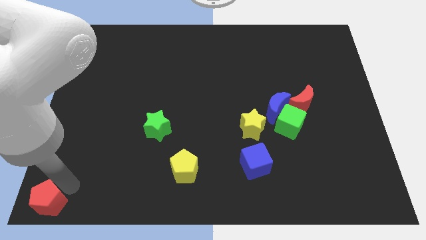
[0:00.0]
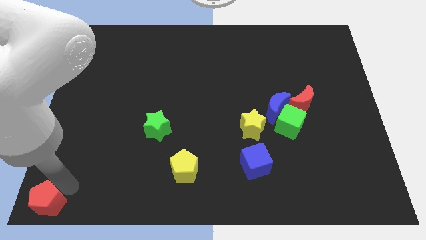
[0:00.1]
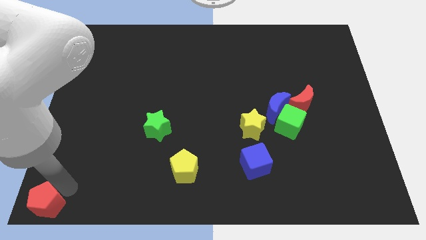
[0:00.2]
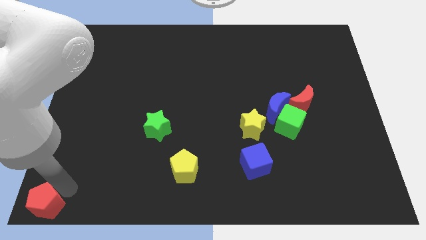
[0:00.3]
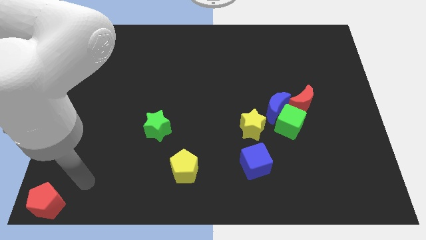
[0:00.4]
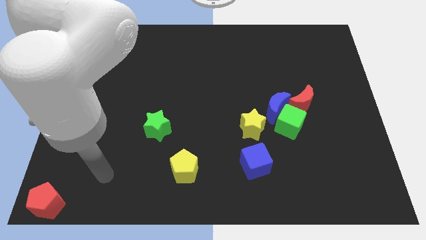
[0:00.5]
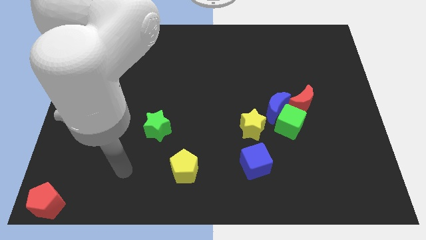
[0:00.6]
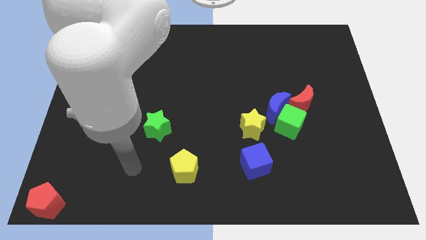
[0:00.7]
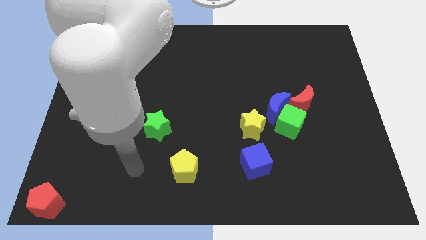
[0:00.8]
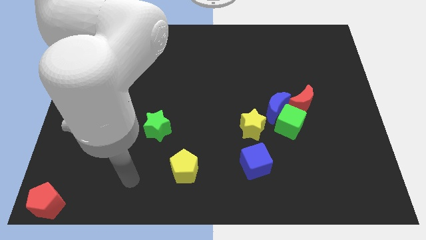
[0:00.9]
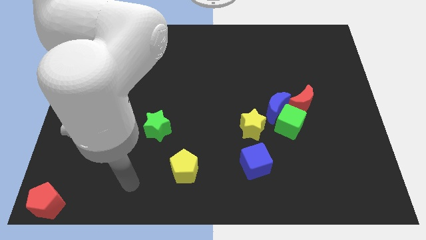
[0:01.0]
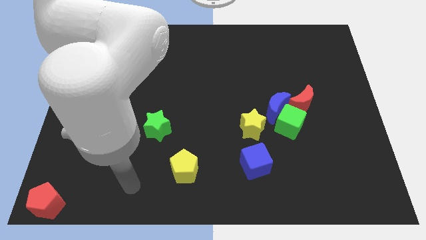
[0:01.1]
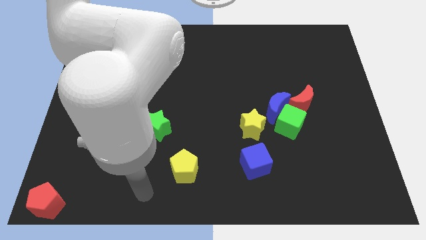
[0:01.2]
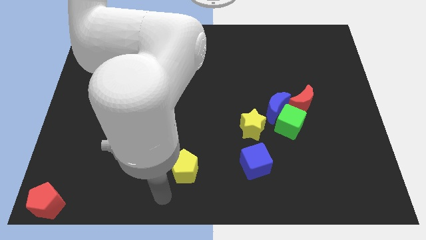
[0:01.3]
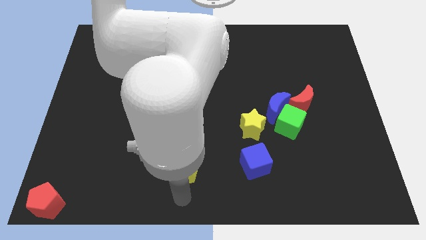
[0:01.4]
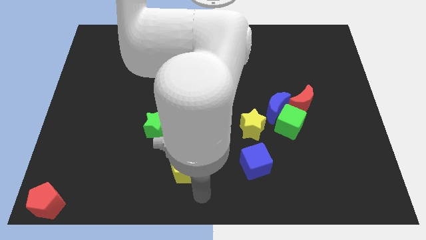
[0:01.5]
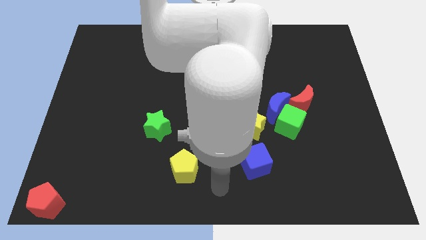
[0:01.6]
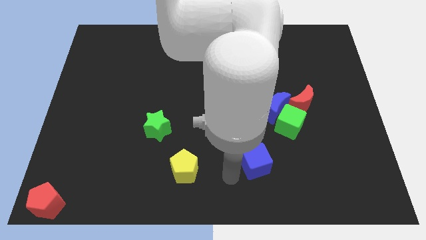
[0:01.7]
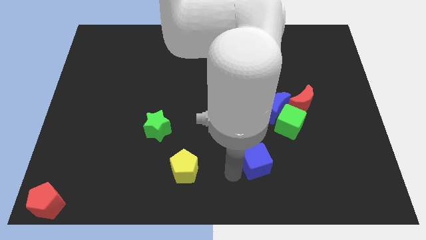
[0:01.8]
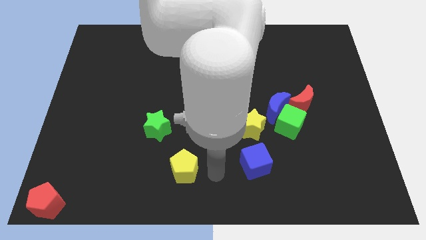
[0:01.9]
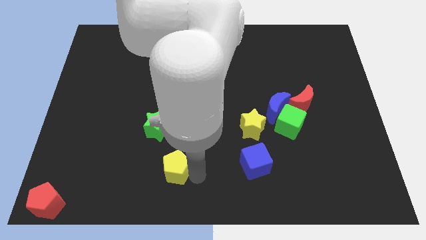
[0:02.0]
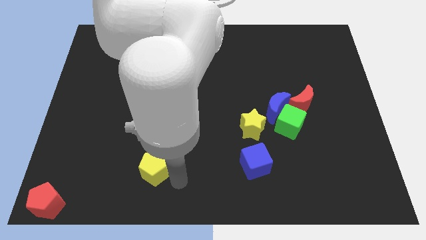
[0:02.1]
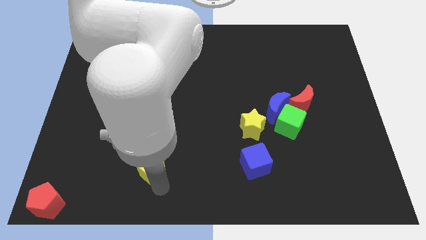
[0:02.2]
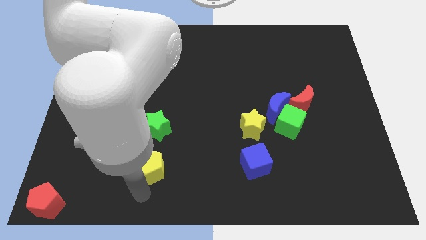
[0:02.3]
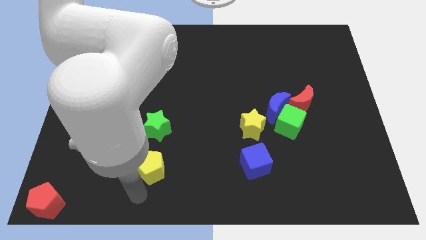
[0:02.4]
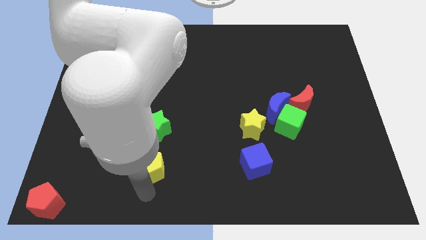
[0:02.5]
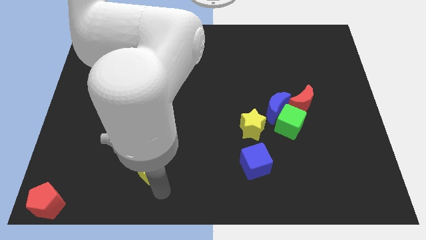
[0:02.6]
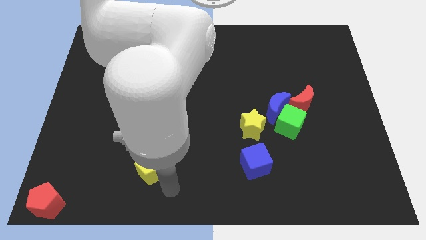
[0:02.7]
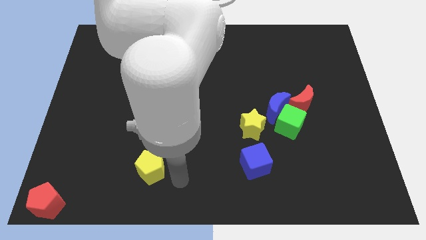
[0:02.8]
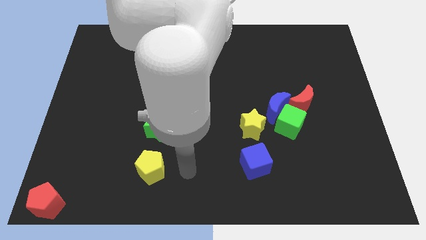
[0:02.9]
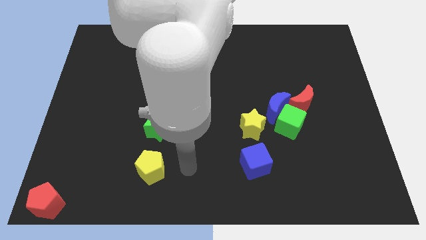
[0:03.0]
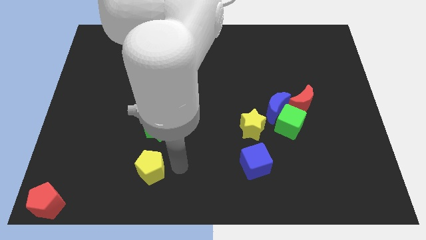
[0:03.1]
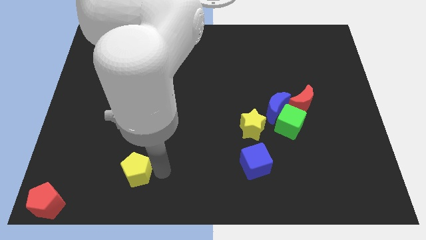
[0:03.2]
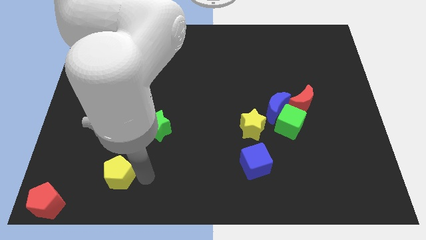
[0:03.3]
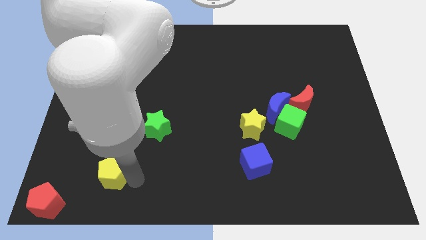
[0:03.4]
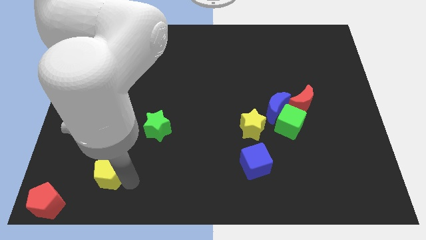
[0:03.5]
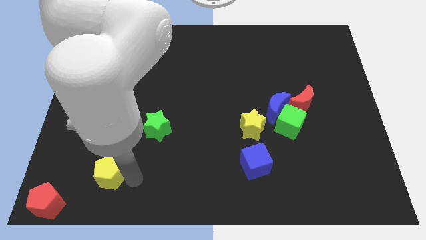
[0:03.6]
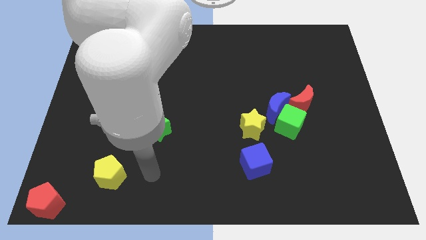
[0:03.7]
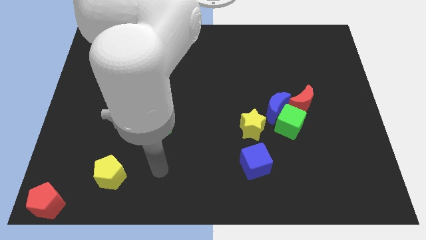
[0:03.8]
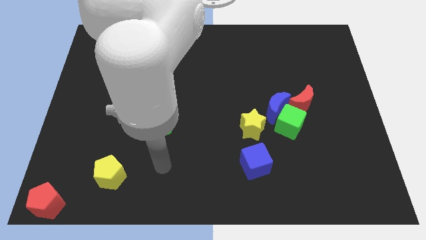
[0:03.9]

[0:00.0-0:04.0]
move the yellow pentagon towards left

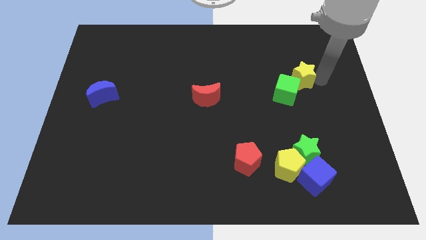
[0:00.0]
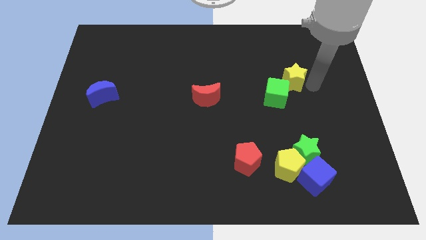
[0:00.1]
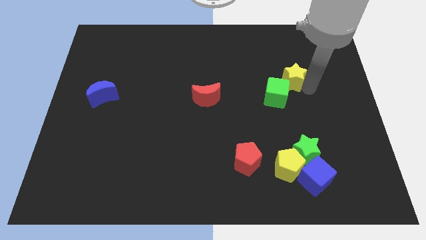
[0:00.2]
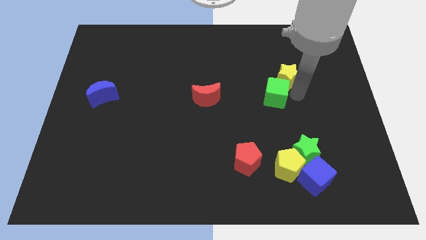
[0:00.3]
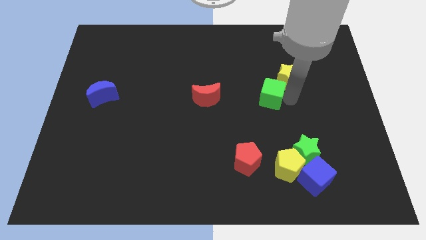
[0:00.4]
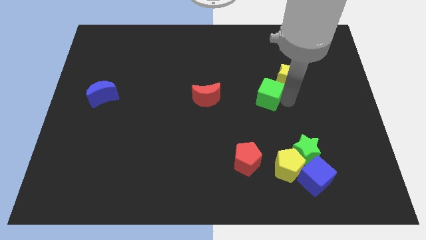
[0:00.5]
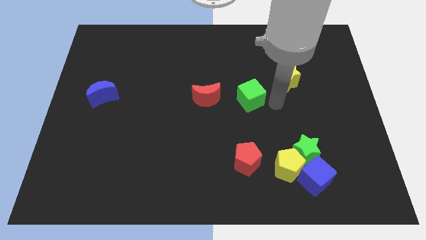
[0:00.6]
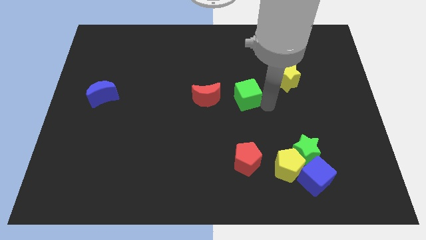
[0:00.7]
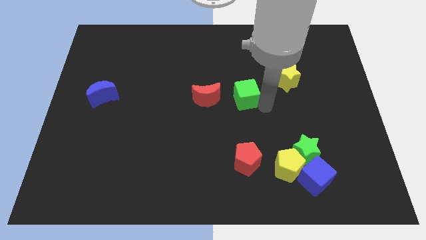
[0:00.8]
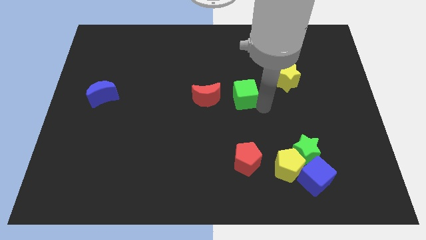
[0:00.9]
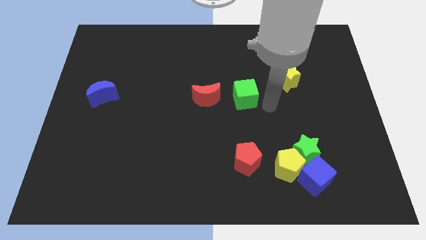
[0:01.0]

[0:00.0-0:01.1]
push green cube above red pentagon

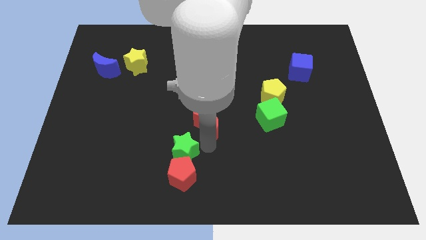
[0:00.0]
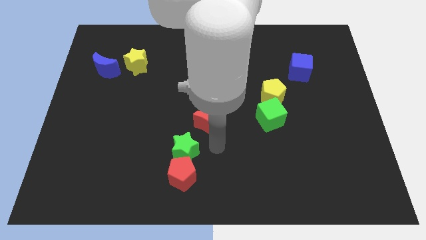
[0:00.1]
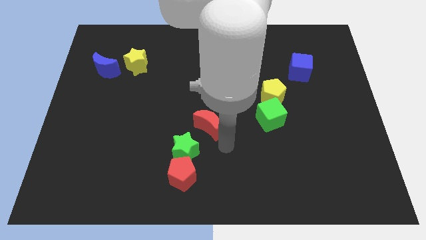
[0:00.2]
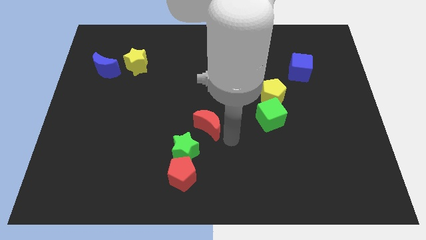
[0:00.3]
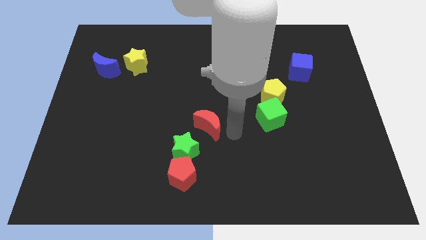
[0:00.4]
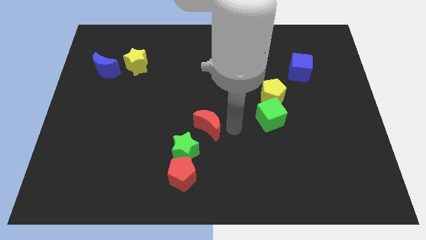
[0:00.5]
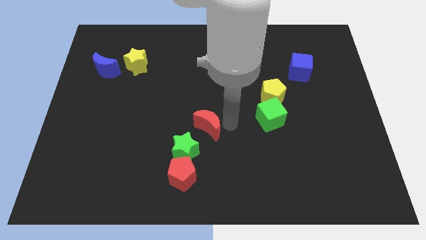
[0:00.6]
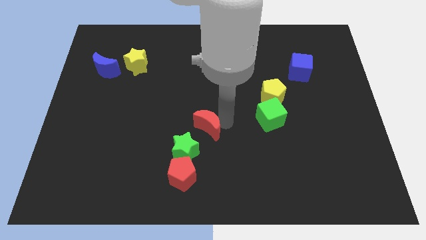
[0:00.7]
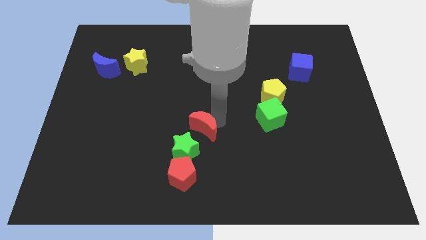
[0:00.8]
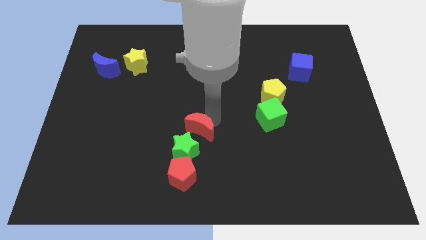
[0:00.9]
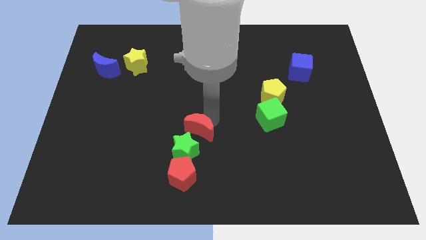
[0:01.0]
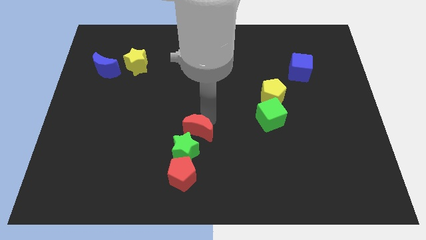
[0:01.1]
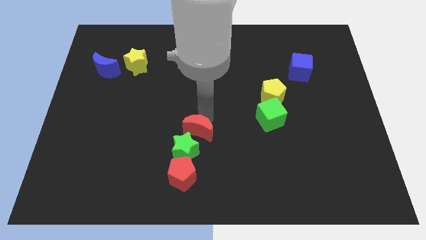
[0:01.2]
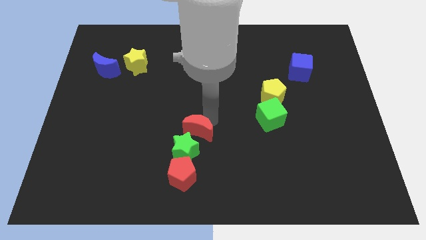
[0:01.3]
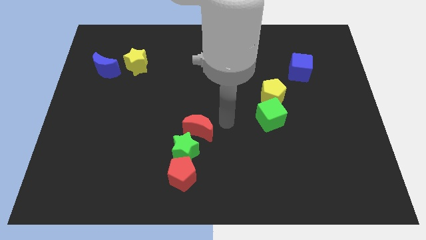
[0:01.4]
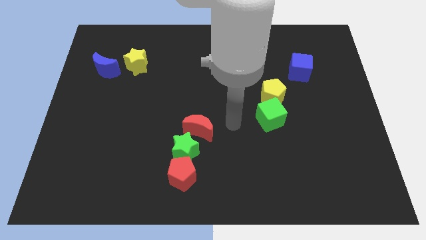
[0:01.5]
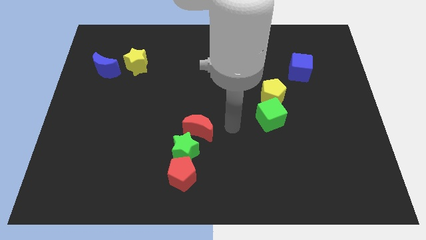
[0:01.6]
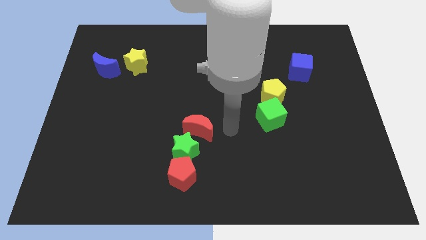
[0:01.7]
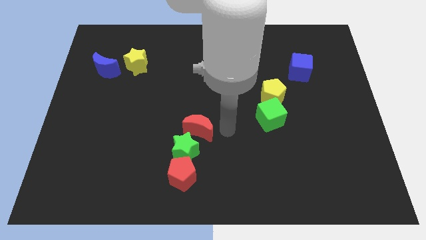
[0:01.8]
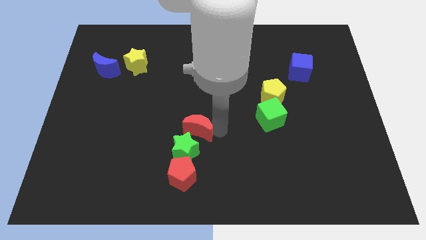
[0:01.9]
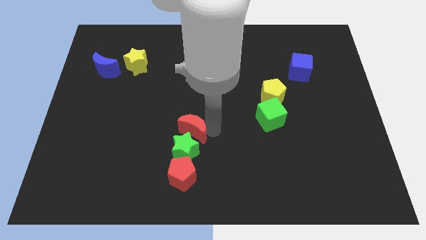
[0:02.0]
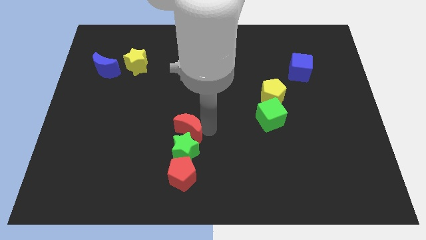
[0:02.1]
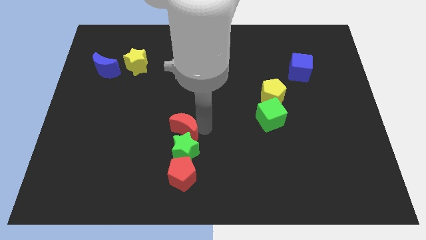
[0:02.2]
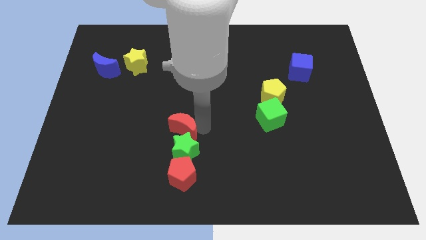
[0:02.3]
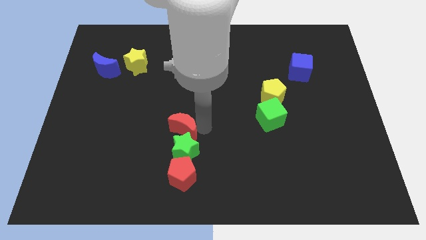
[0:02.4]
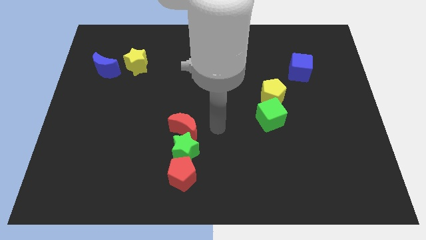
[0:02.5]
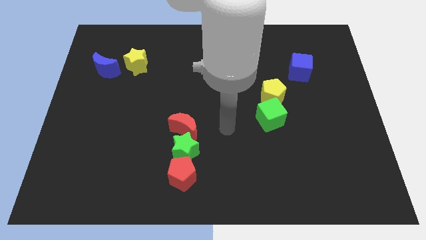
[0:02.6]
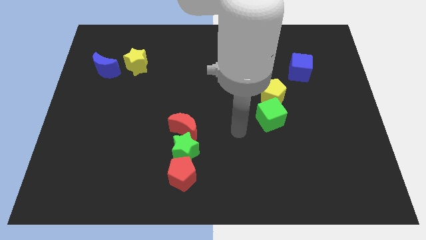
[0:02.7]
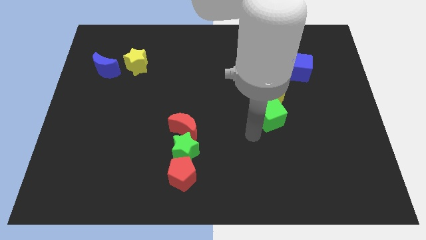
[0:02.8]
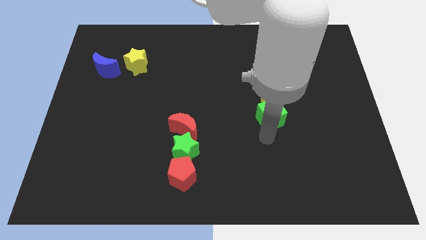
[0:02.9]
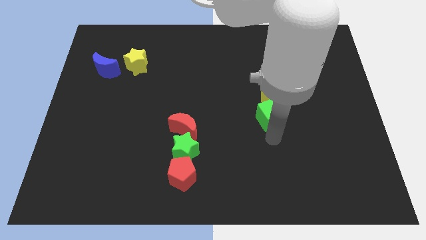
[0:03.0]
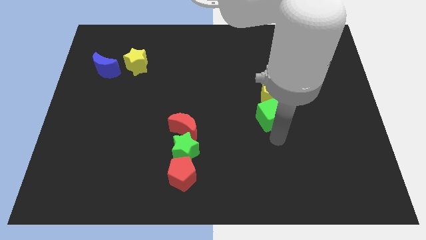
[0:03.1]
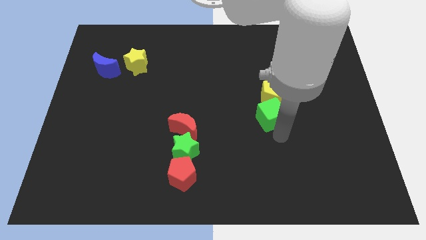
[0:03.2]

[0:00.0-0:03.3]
place red crescent on top of green star

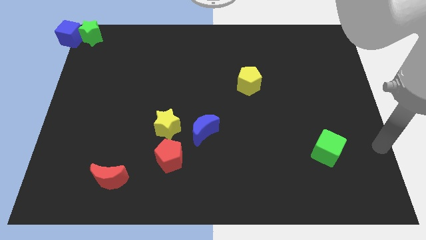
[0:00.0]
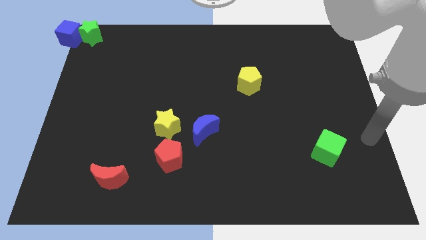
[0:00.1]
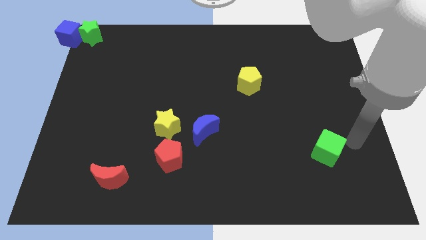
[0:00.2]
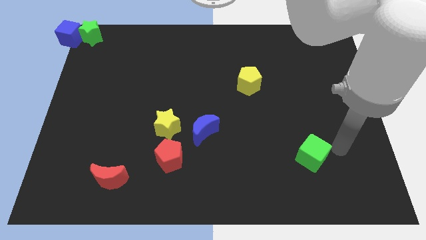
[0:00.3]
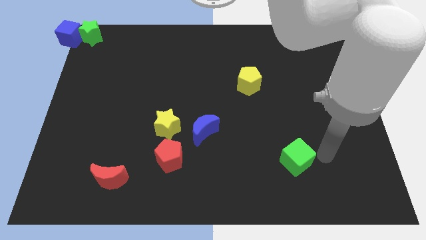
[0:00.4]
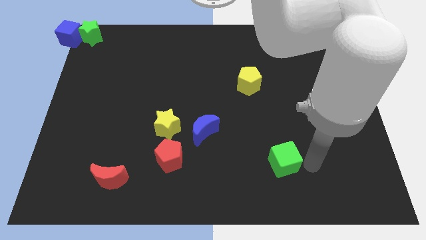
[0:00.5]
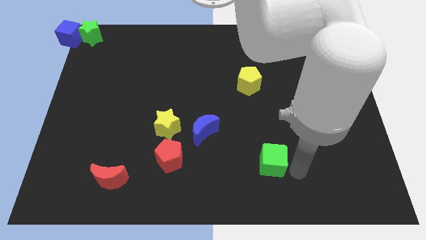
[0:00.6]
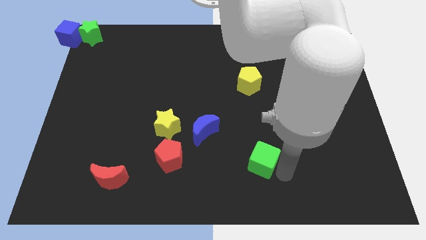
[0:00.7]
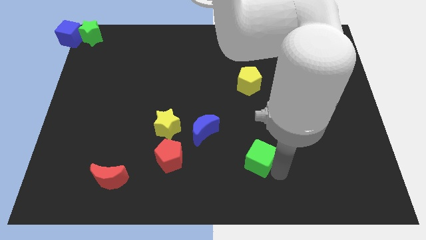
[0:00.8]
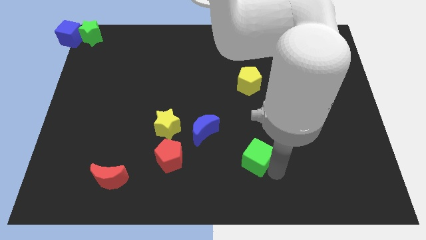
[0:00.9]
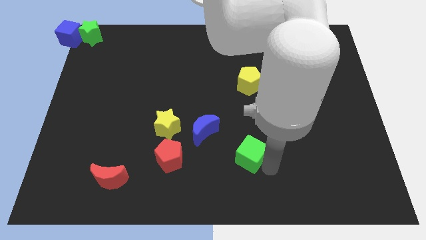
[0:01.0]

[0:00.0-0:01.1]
move the green cube to the bottom of the yellow pentagon
